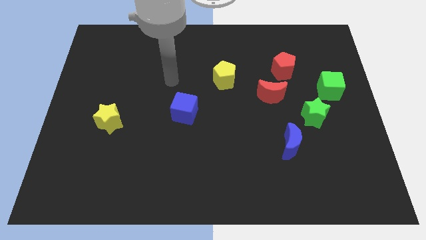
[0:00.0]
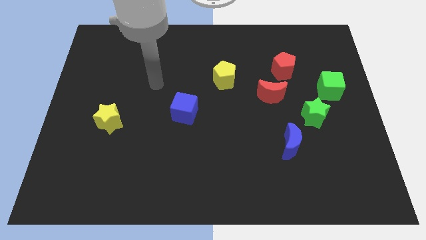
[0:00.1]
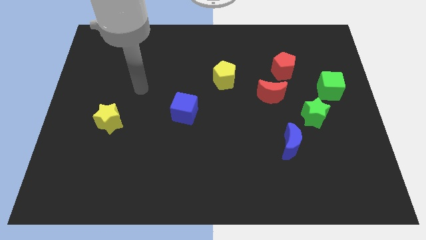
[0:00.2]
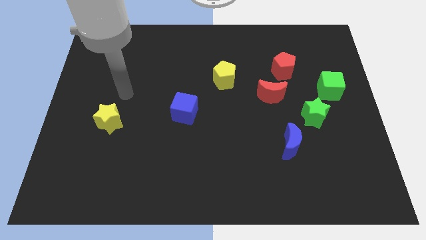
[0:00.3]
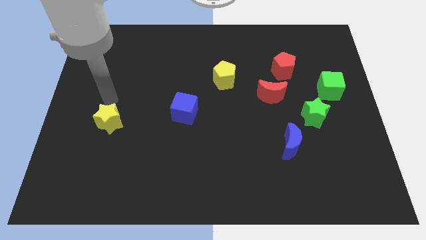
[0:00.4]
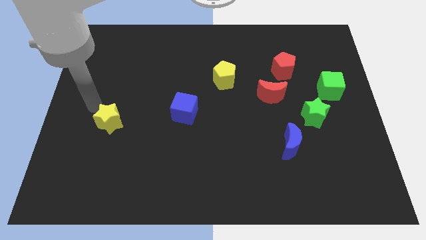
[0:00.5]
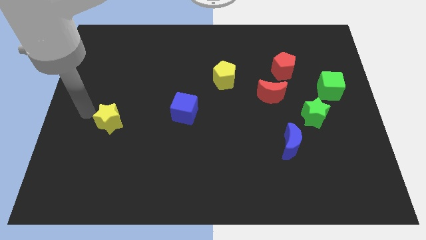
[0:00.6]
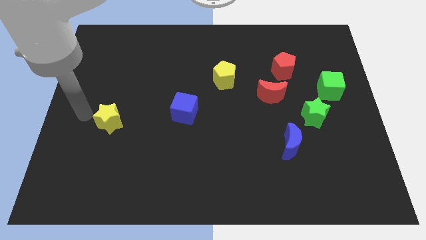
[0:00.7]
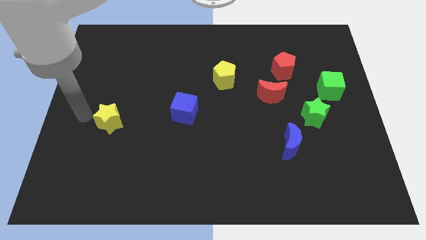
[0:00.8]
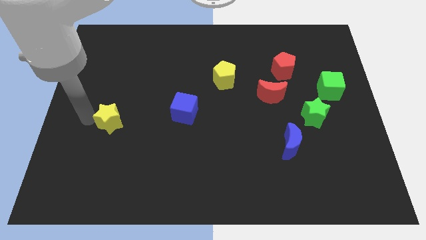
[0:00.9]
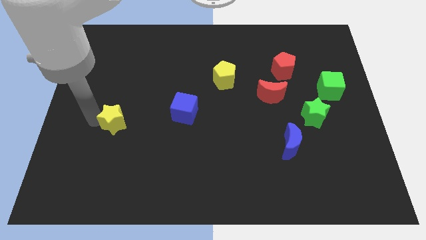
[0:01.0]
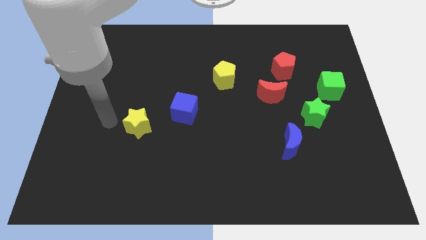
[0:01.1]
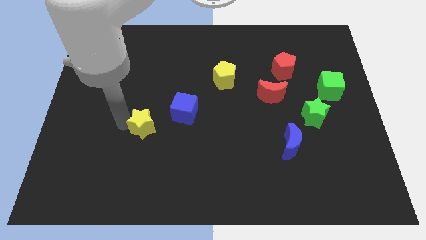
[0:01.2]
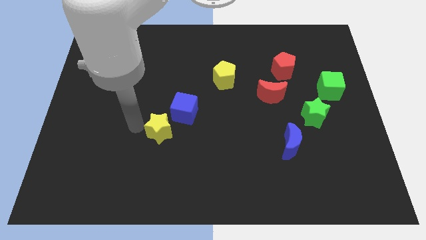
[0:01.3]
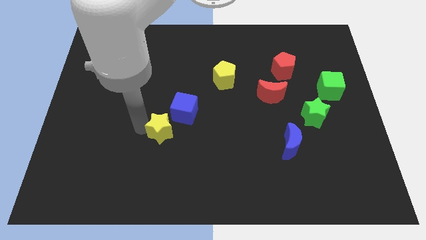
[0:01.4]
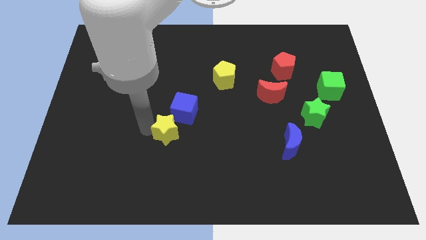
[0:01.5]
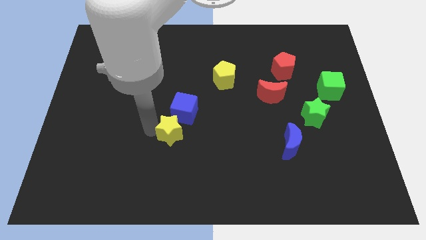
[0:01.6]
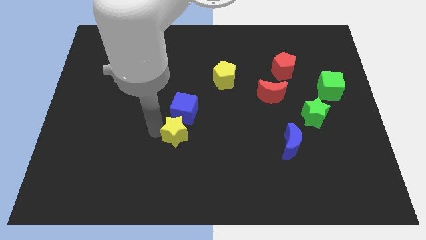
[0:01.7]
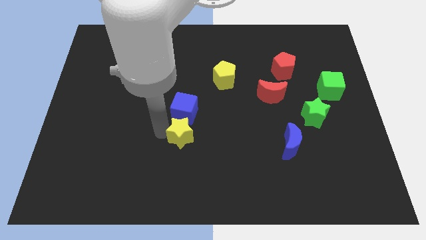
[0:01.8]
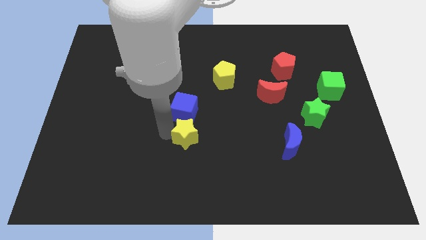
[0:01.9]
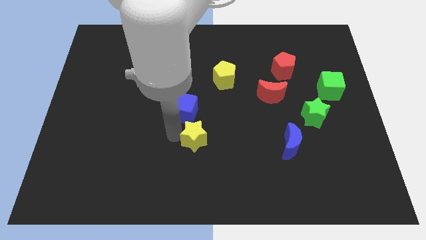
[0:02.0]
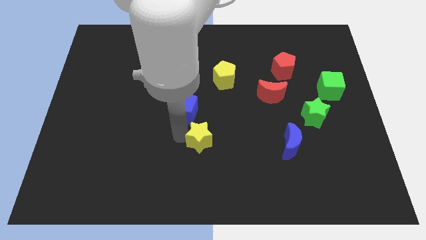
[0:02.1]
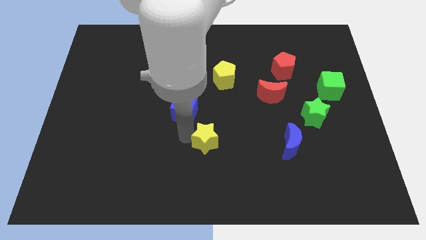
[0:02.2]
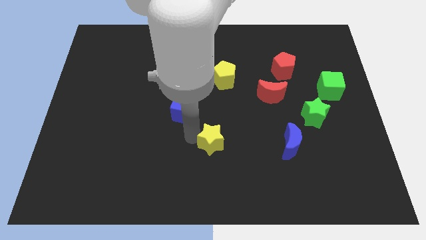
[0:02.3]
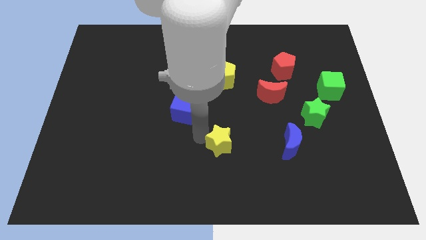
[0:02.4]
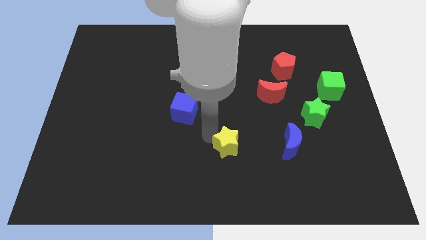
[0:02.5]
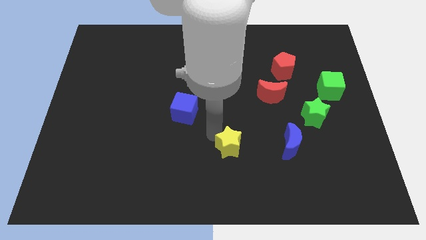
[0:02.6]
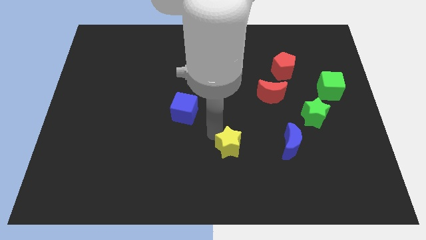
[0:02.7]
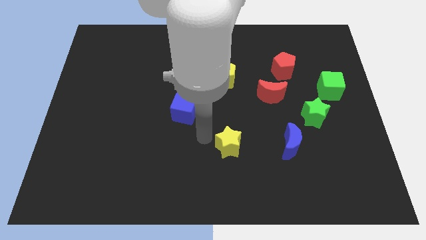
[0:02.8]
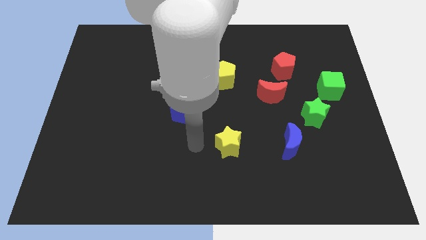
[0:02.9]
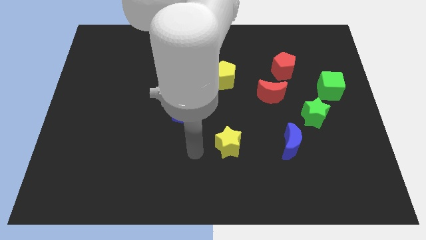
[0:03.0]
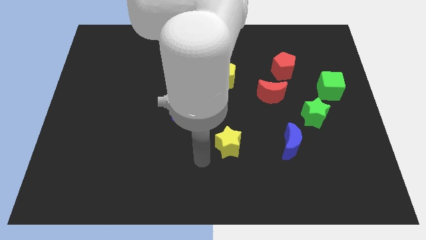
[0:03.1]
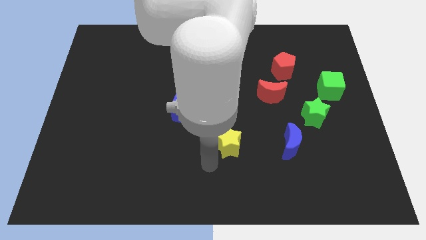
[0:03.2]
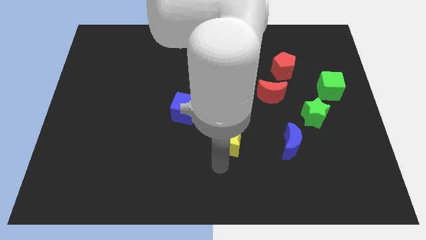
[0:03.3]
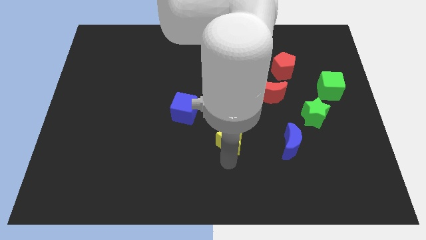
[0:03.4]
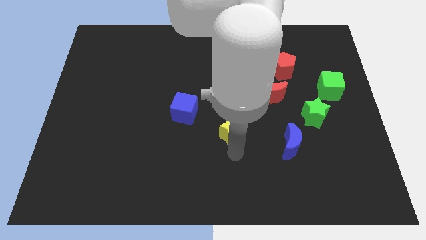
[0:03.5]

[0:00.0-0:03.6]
put the yellow star to the left side of the blue crescent

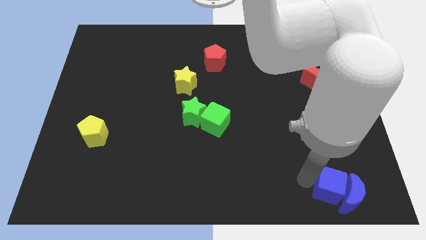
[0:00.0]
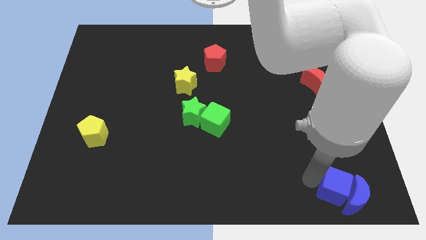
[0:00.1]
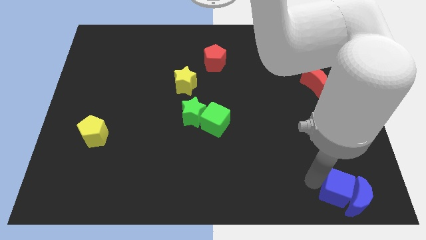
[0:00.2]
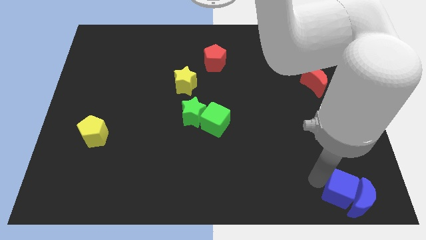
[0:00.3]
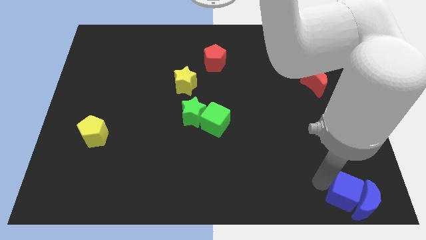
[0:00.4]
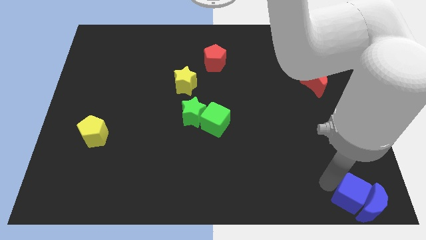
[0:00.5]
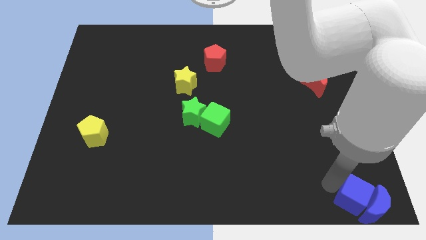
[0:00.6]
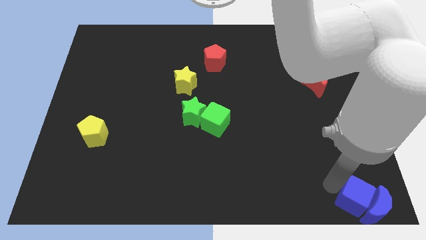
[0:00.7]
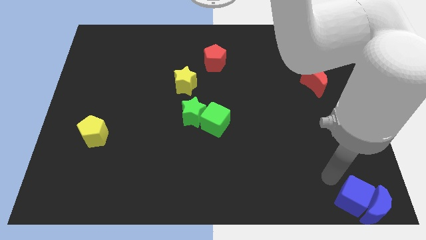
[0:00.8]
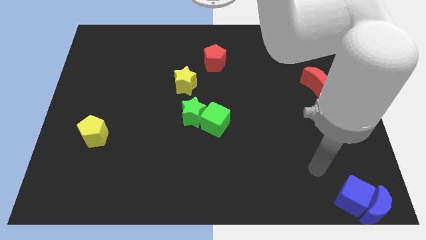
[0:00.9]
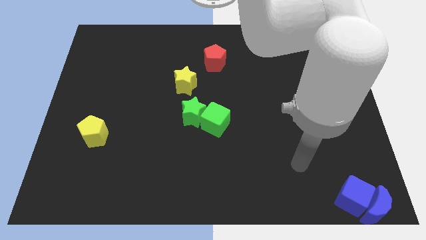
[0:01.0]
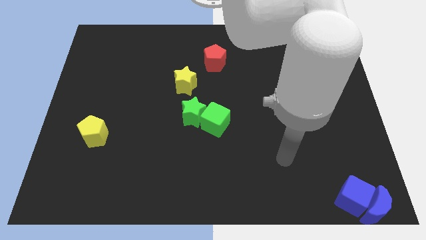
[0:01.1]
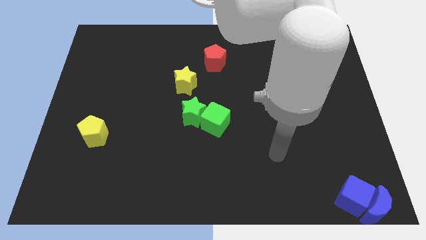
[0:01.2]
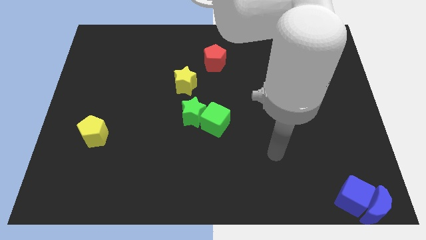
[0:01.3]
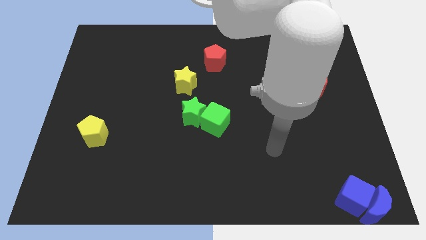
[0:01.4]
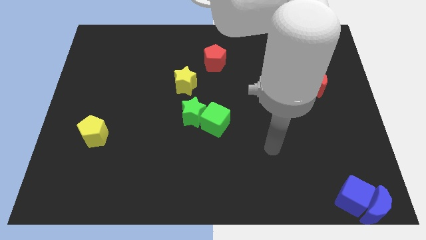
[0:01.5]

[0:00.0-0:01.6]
push the blue moon with blue cube to the bottom right of the board

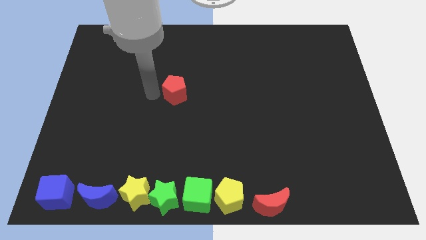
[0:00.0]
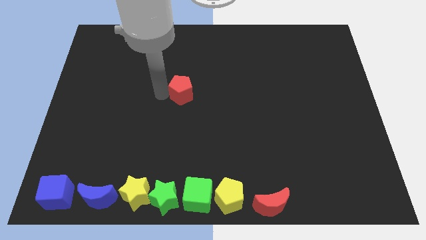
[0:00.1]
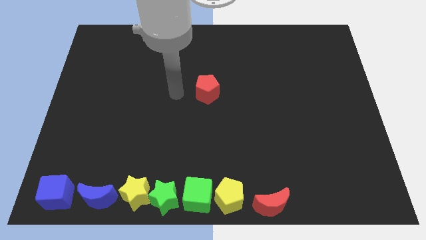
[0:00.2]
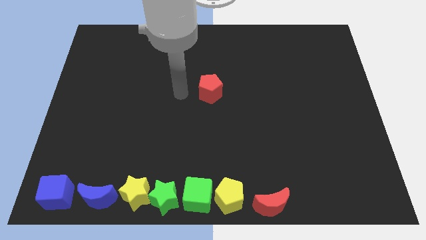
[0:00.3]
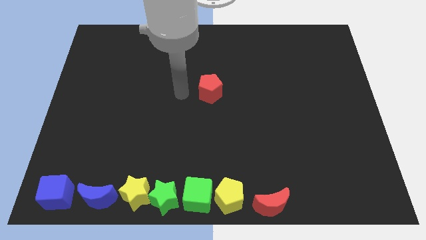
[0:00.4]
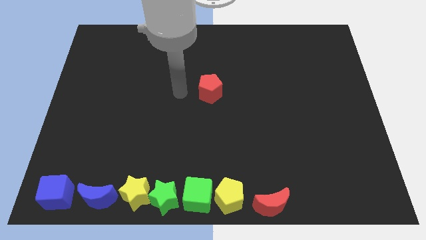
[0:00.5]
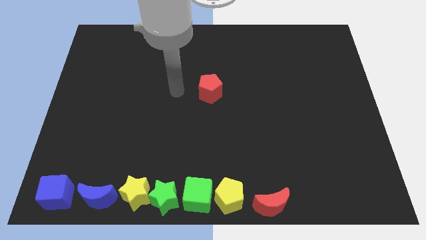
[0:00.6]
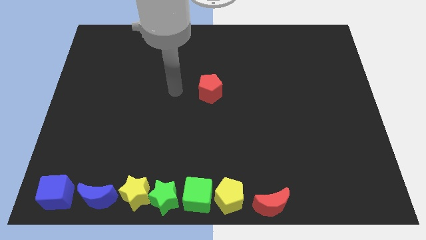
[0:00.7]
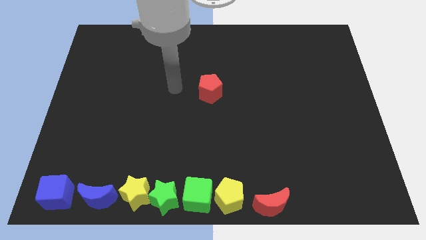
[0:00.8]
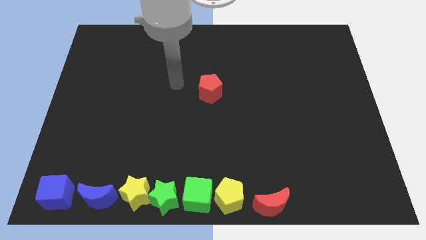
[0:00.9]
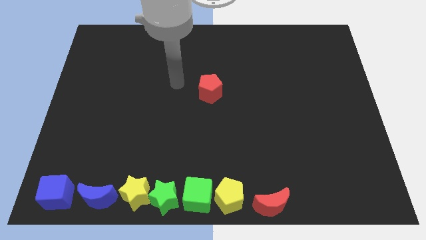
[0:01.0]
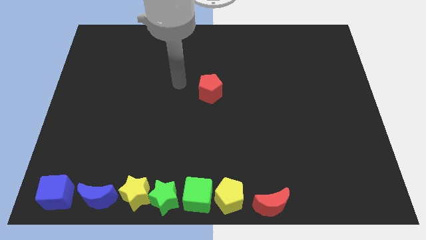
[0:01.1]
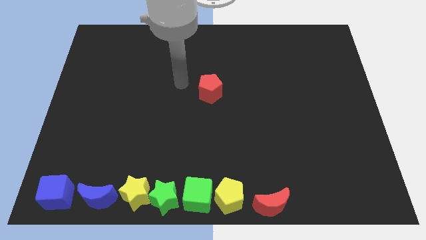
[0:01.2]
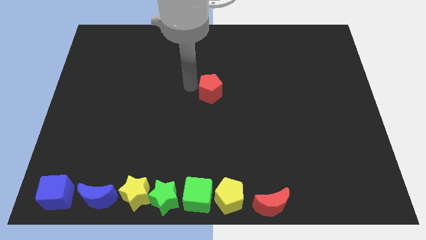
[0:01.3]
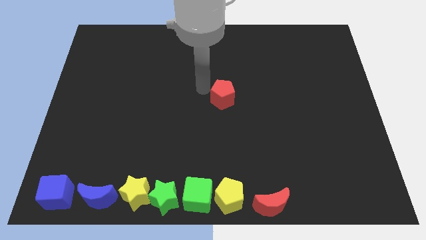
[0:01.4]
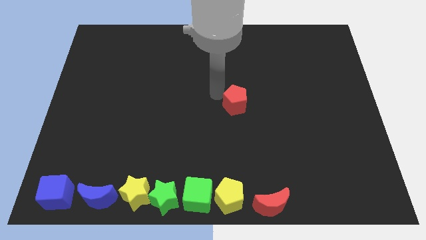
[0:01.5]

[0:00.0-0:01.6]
drag red pentagon above yellow pentagon

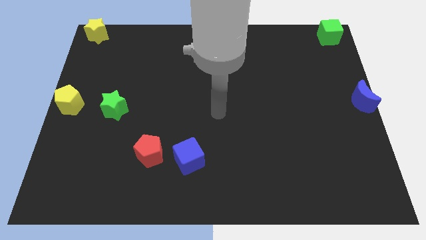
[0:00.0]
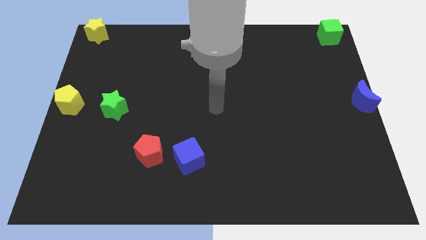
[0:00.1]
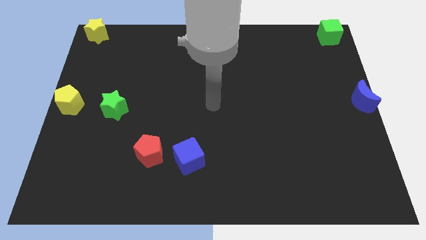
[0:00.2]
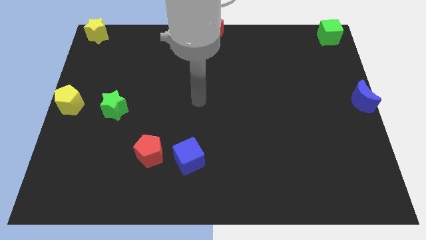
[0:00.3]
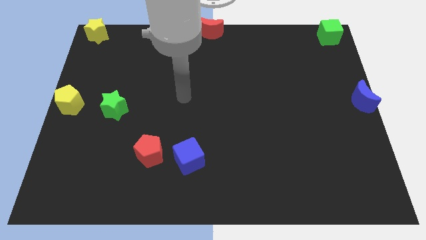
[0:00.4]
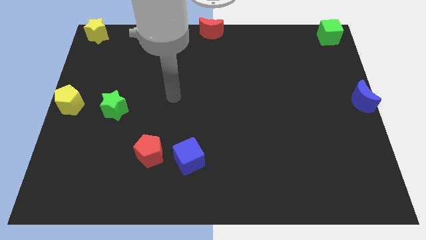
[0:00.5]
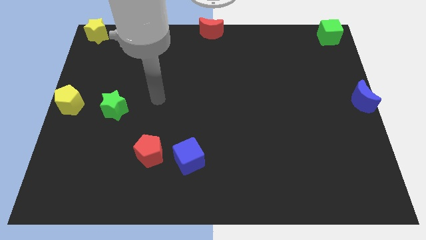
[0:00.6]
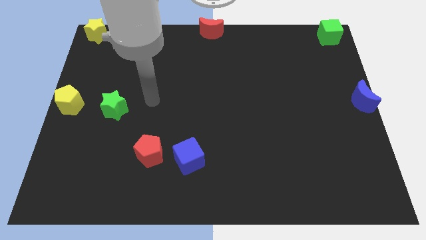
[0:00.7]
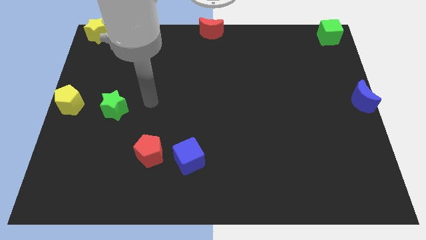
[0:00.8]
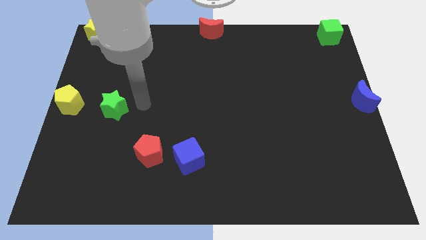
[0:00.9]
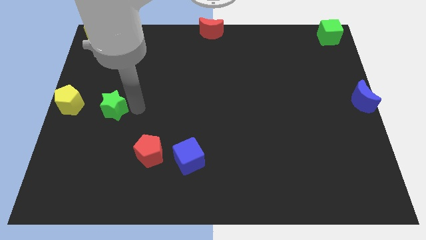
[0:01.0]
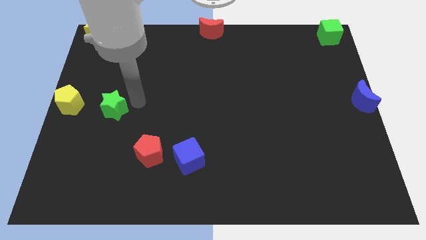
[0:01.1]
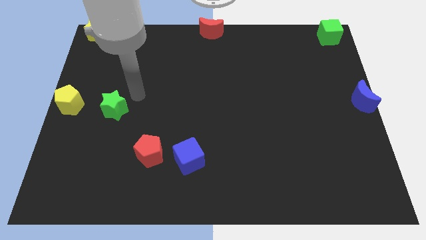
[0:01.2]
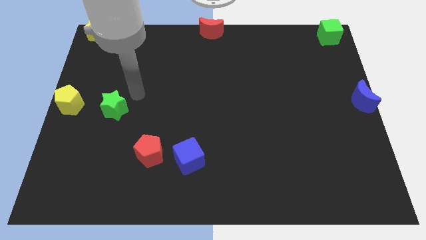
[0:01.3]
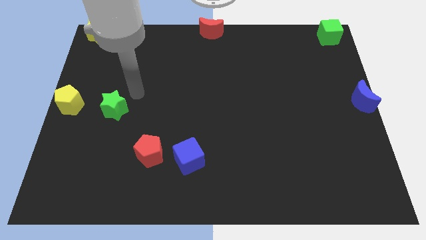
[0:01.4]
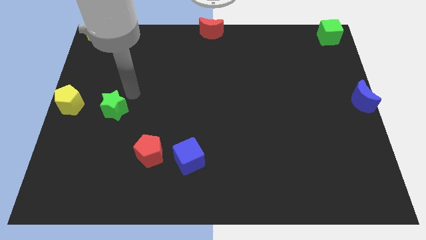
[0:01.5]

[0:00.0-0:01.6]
move the arm towards the green star

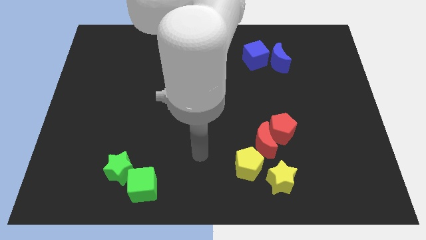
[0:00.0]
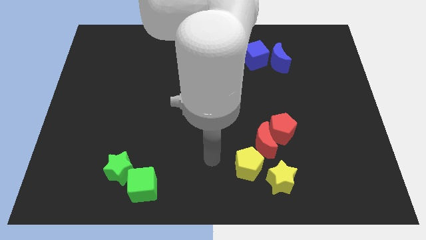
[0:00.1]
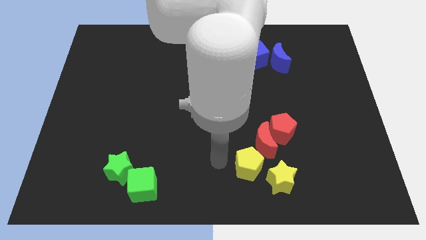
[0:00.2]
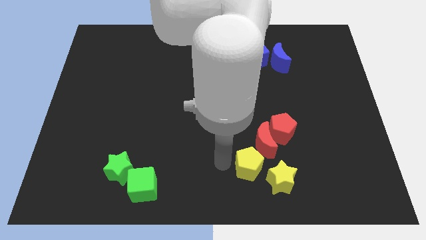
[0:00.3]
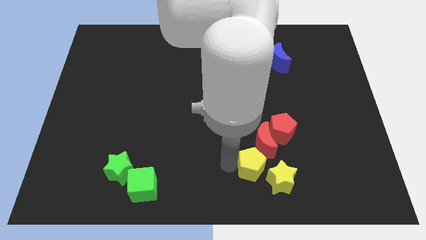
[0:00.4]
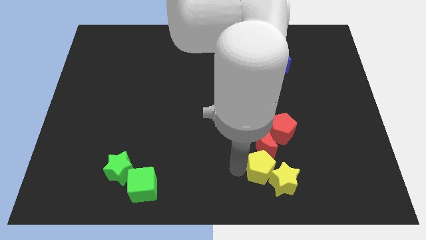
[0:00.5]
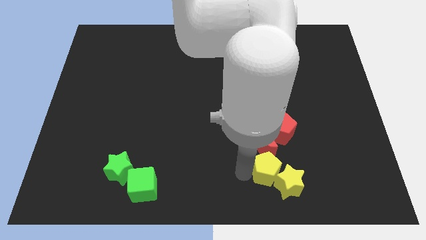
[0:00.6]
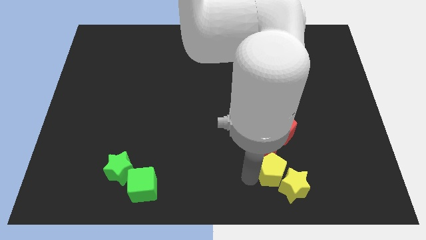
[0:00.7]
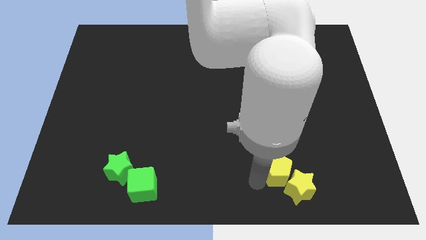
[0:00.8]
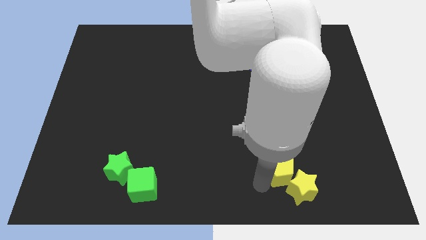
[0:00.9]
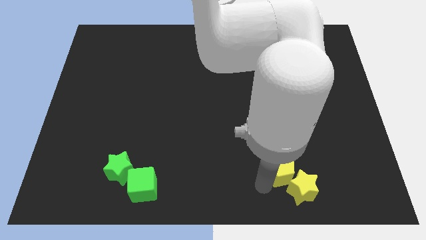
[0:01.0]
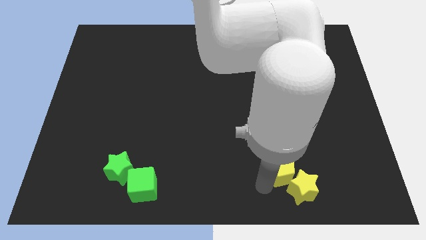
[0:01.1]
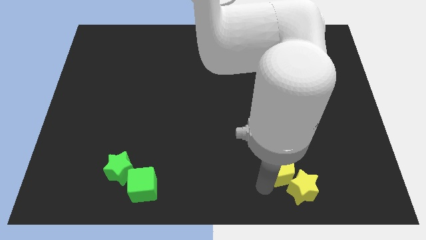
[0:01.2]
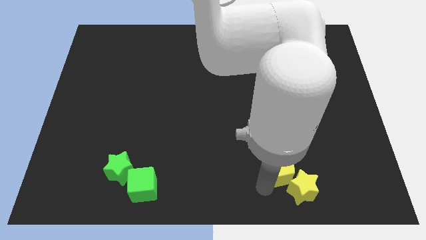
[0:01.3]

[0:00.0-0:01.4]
move the yellow pentagon into the yellow star
